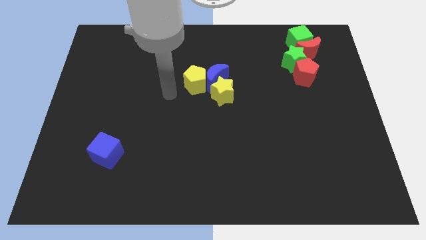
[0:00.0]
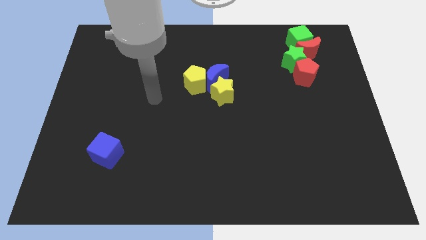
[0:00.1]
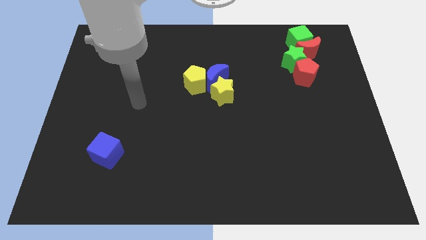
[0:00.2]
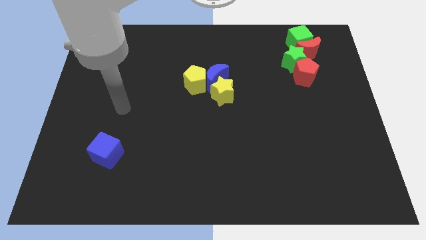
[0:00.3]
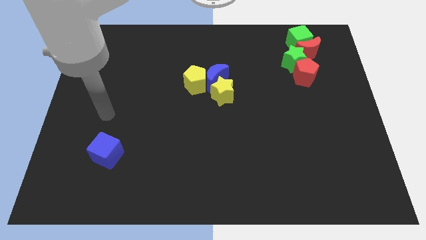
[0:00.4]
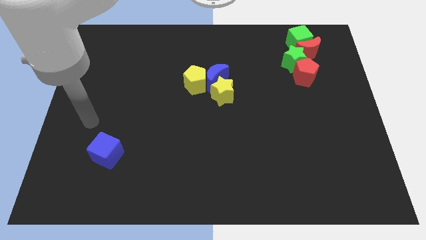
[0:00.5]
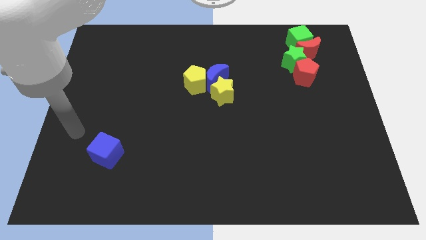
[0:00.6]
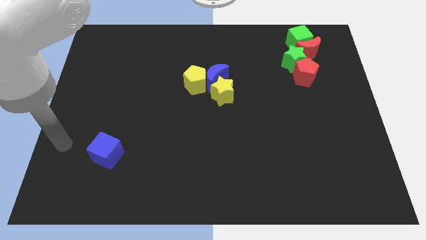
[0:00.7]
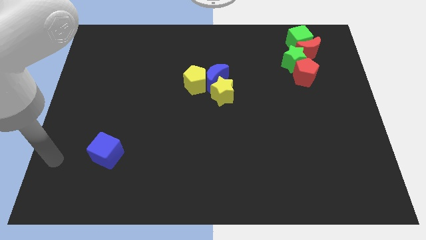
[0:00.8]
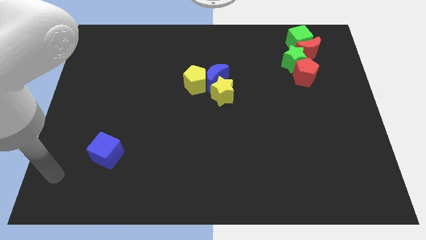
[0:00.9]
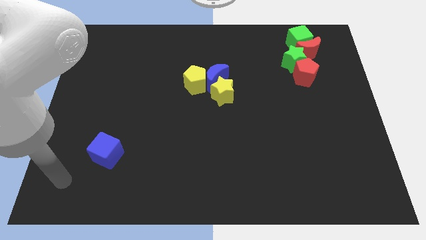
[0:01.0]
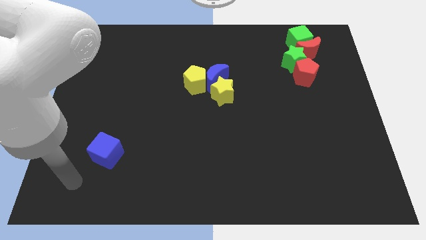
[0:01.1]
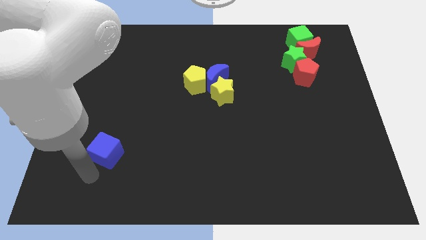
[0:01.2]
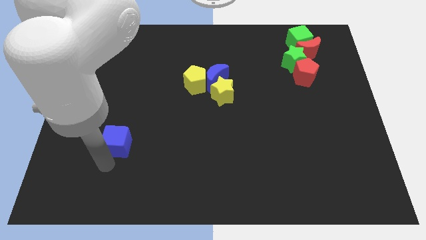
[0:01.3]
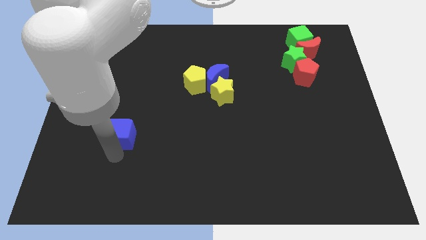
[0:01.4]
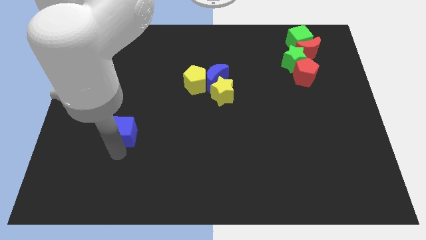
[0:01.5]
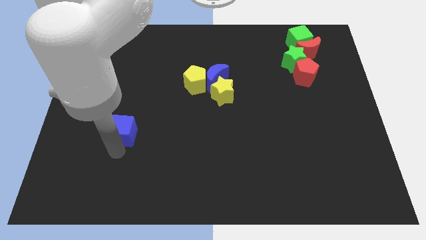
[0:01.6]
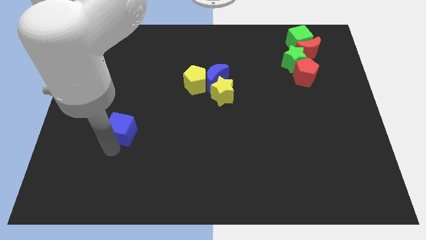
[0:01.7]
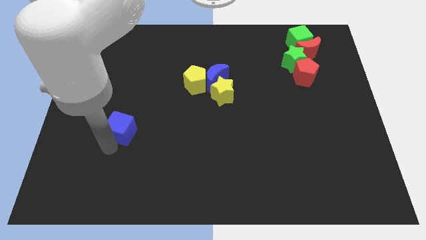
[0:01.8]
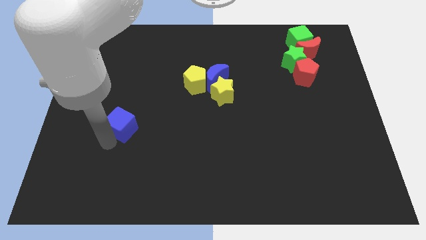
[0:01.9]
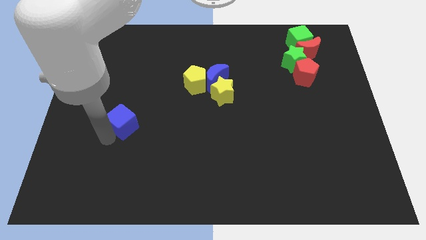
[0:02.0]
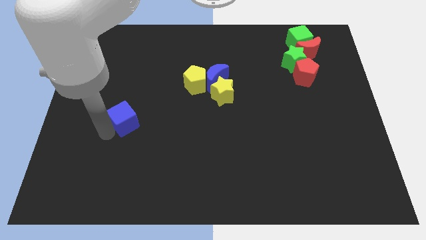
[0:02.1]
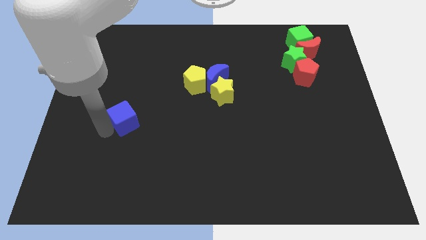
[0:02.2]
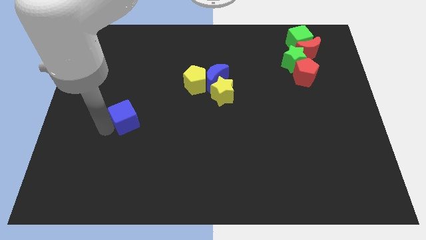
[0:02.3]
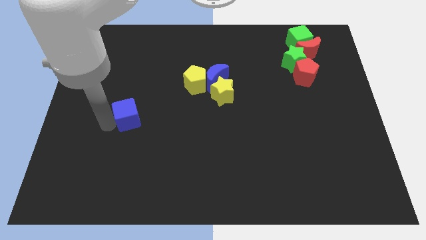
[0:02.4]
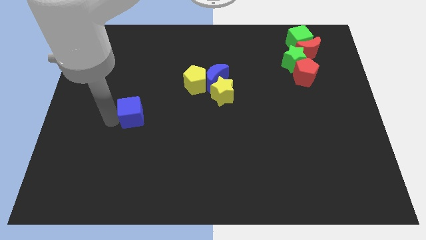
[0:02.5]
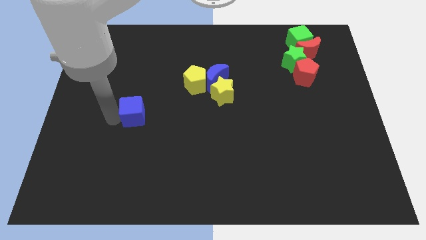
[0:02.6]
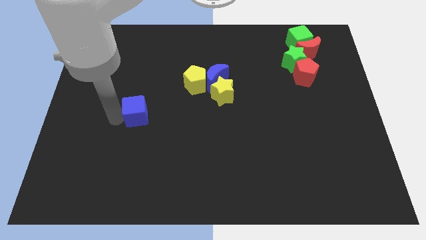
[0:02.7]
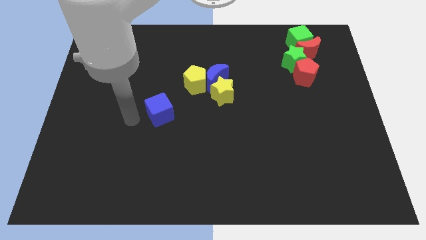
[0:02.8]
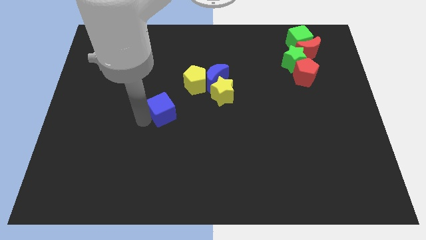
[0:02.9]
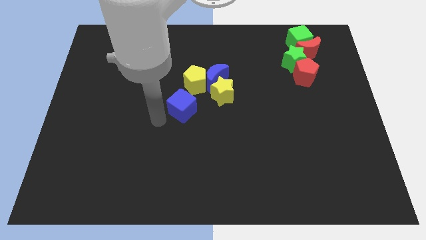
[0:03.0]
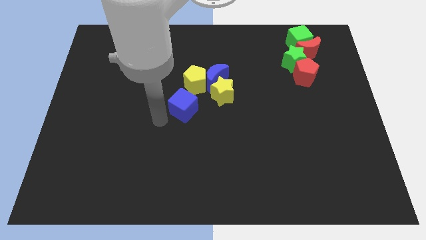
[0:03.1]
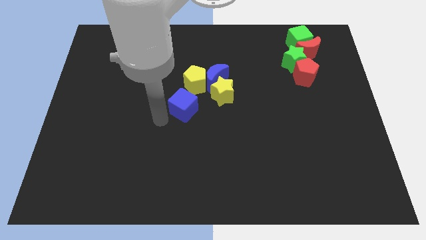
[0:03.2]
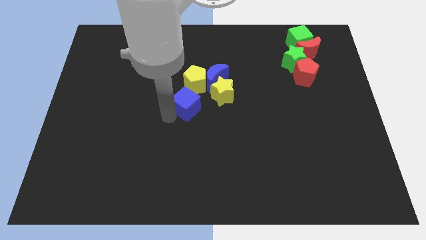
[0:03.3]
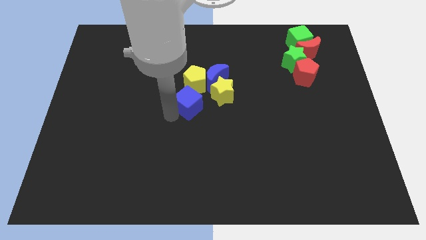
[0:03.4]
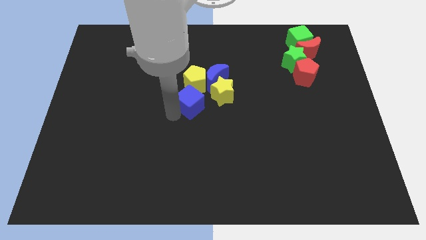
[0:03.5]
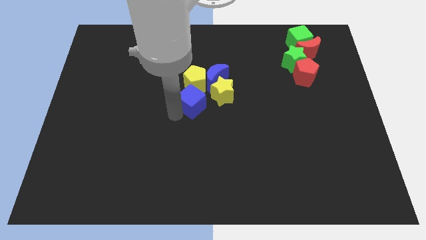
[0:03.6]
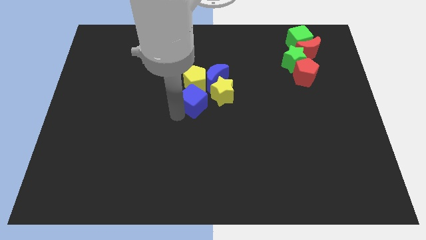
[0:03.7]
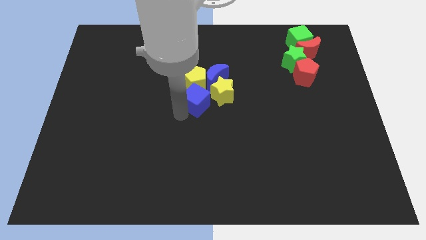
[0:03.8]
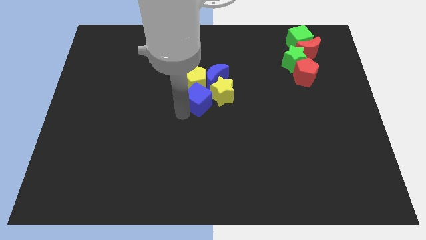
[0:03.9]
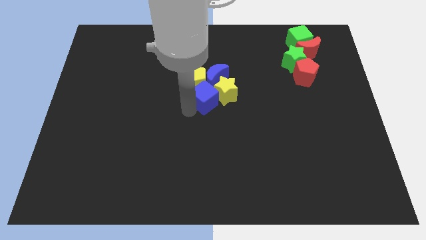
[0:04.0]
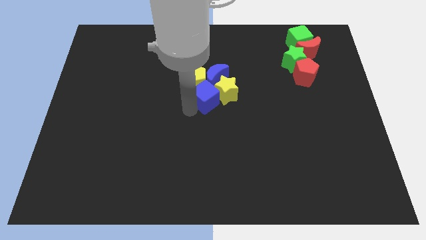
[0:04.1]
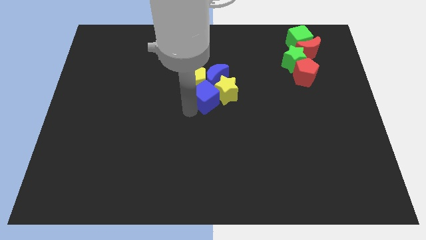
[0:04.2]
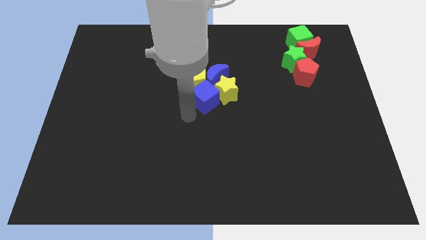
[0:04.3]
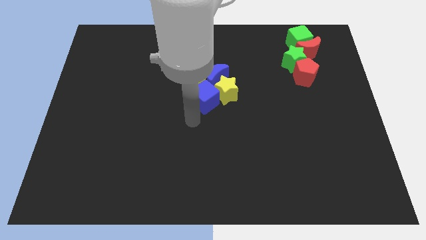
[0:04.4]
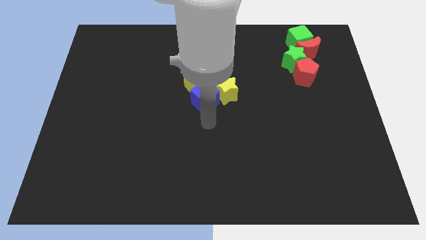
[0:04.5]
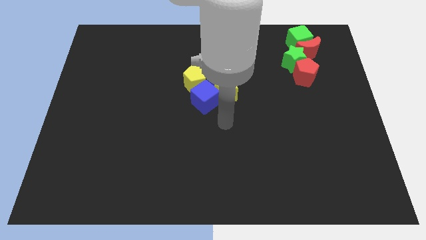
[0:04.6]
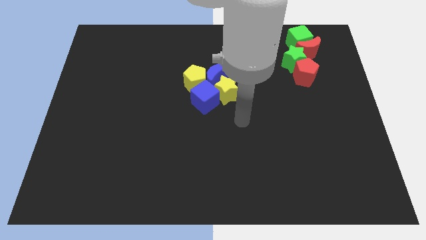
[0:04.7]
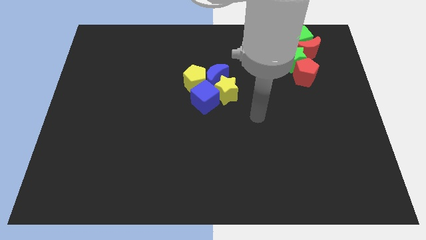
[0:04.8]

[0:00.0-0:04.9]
push the blue cube to the left side of the yellow star

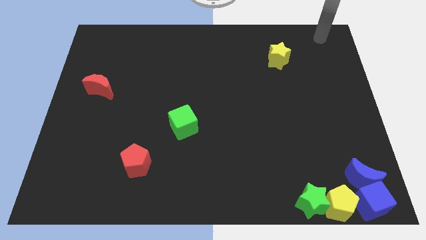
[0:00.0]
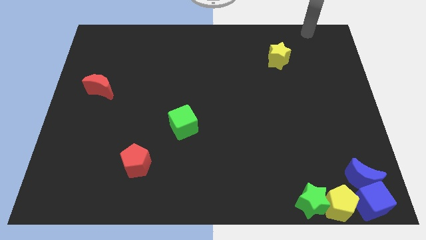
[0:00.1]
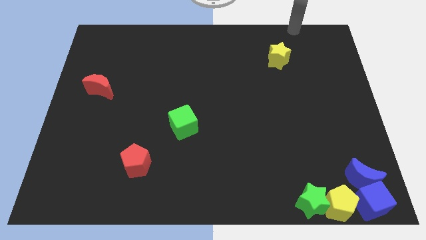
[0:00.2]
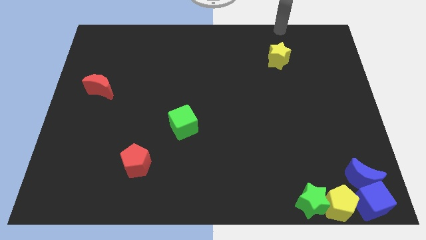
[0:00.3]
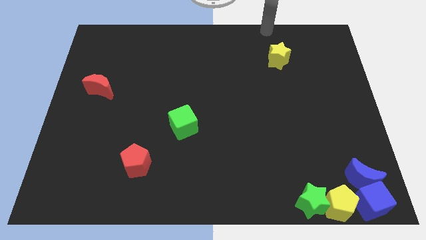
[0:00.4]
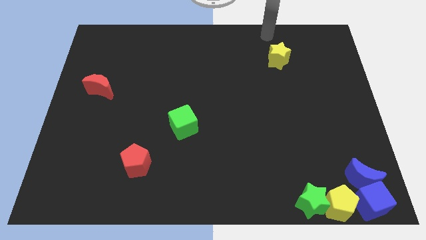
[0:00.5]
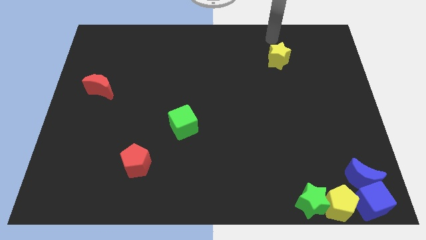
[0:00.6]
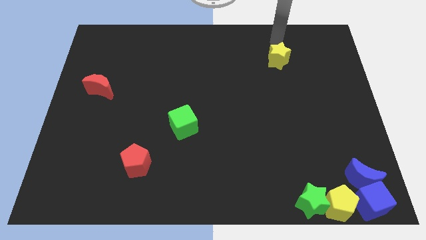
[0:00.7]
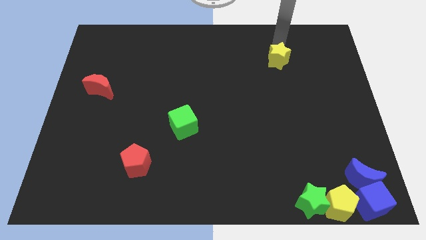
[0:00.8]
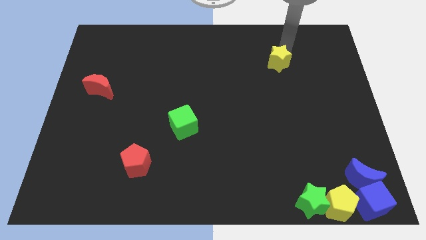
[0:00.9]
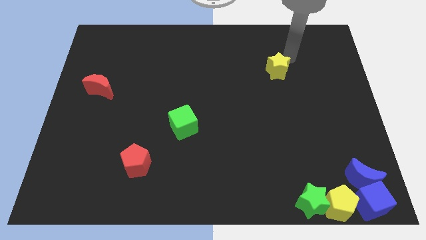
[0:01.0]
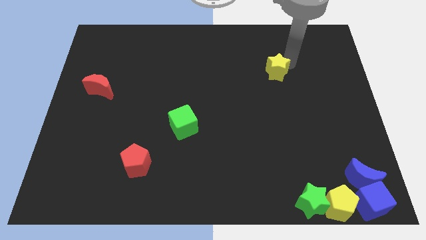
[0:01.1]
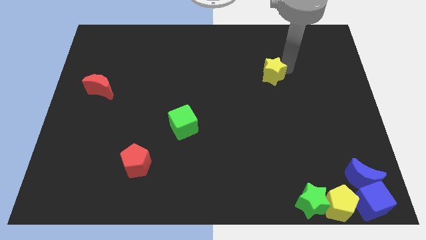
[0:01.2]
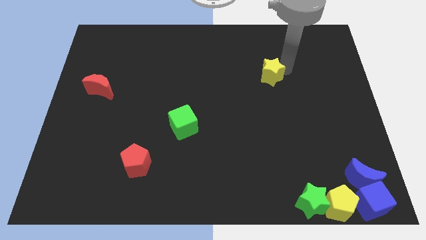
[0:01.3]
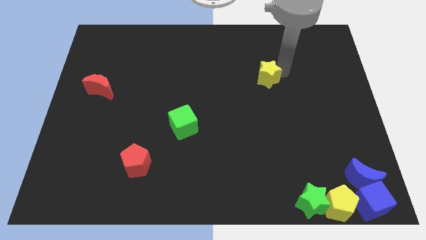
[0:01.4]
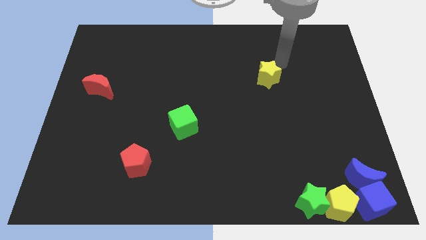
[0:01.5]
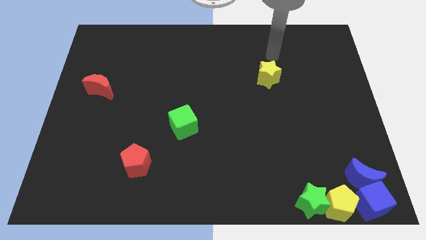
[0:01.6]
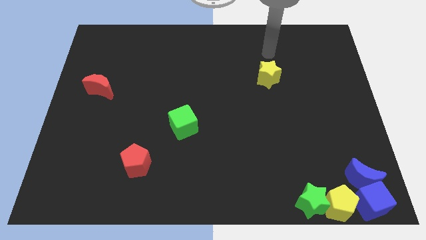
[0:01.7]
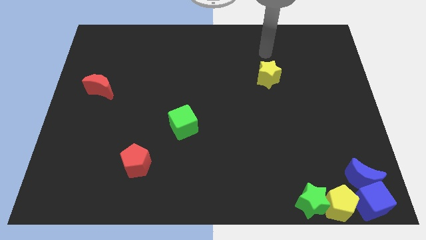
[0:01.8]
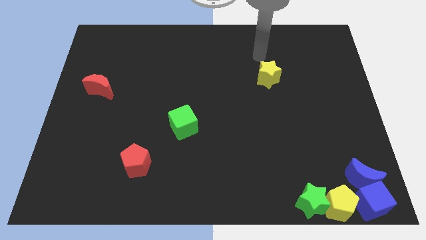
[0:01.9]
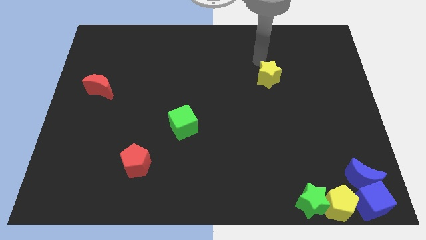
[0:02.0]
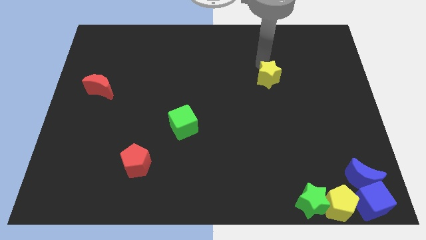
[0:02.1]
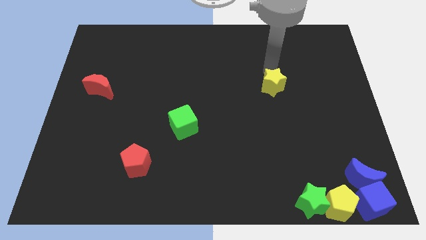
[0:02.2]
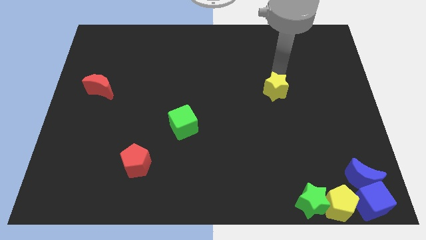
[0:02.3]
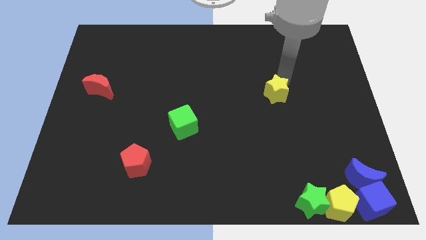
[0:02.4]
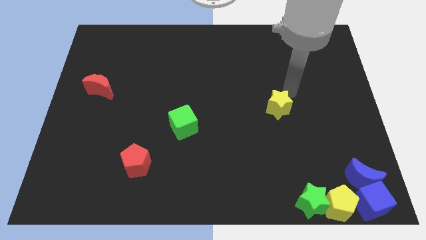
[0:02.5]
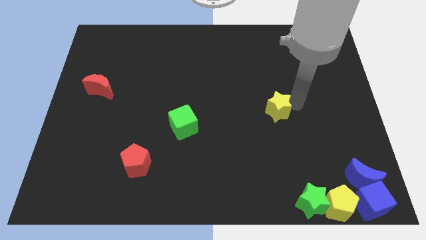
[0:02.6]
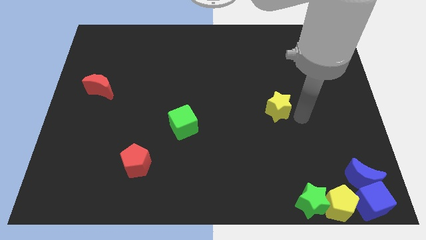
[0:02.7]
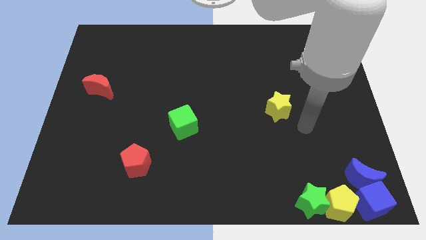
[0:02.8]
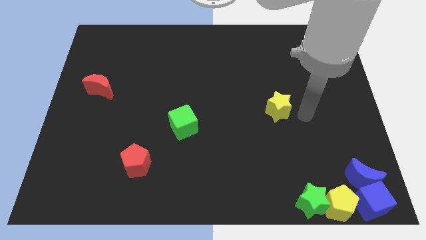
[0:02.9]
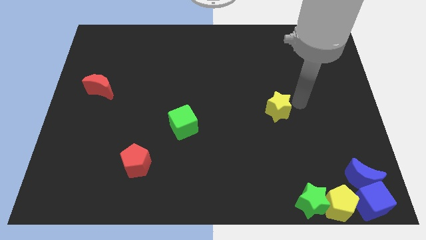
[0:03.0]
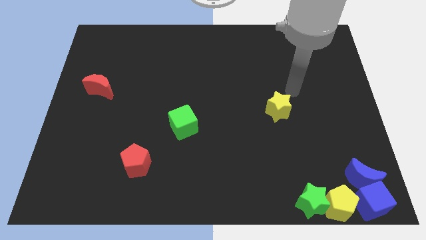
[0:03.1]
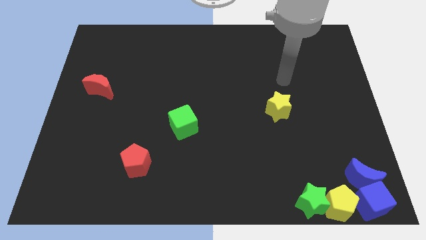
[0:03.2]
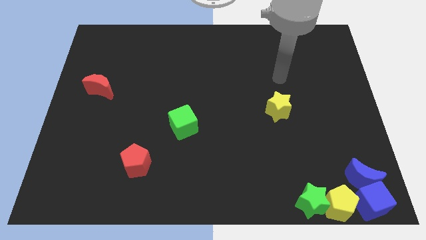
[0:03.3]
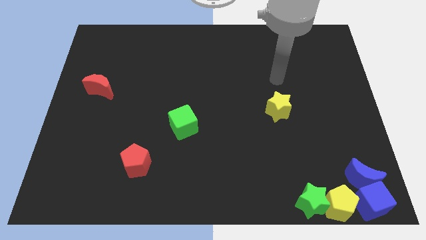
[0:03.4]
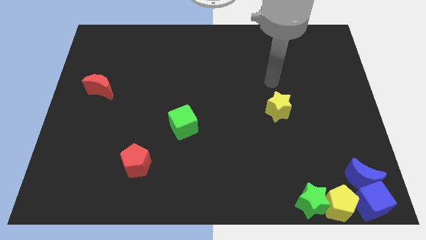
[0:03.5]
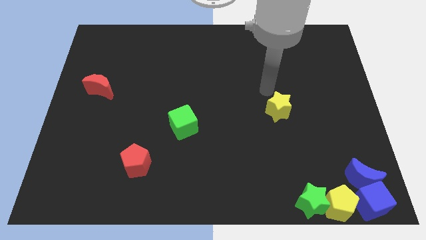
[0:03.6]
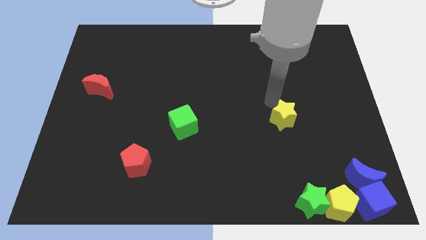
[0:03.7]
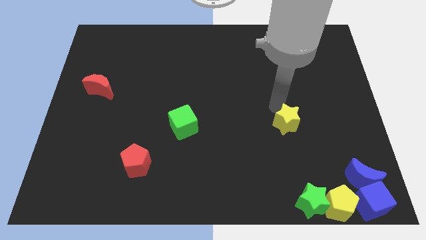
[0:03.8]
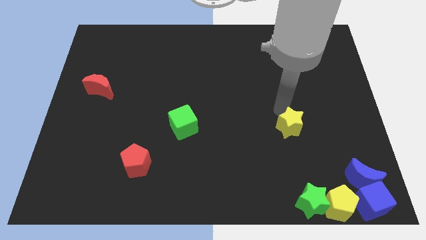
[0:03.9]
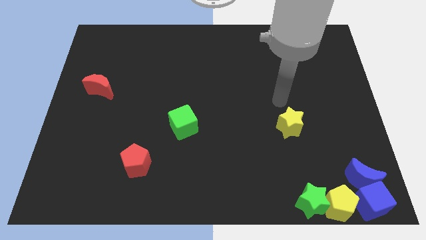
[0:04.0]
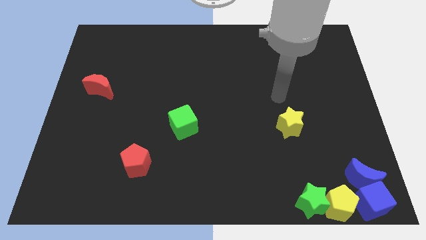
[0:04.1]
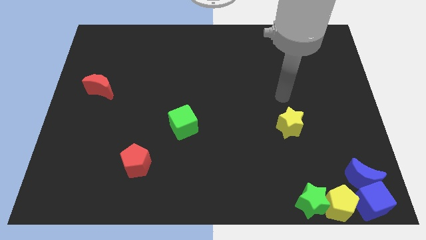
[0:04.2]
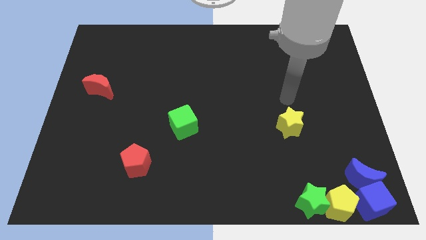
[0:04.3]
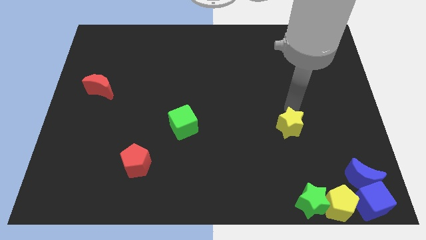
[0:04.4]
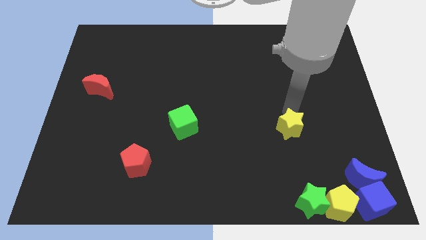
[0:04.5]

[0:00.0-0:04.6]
slide the yellow star towards the green star
